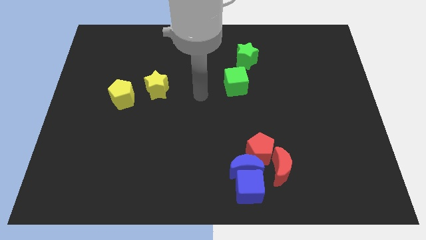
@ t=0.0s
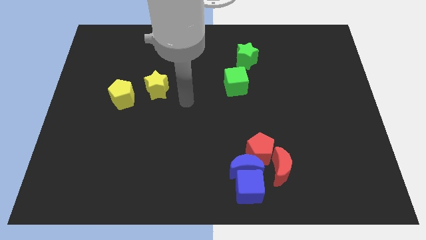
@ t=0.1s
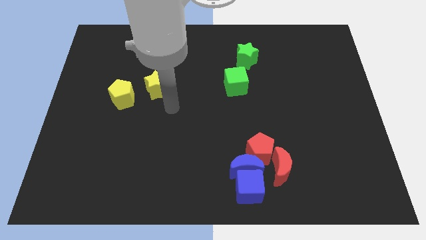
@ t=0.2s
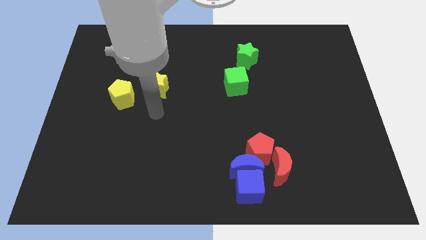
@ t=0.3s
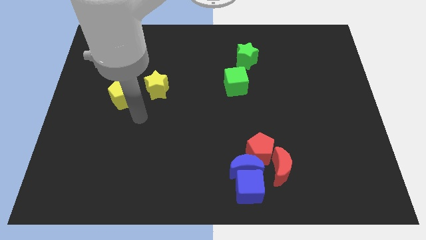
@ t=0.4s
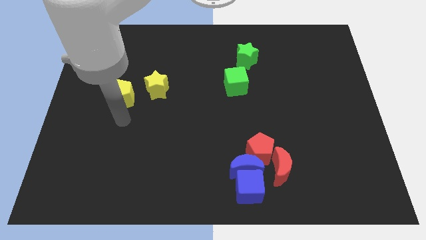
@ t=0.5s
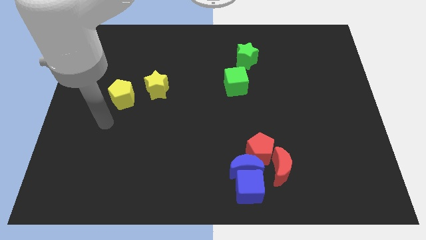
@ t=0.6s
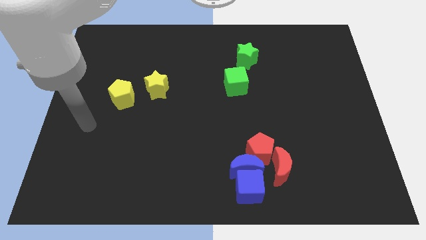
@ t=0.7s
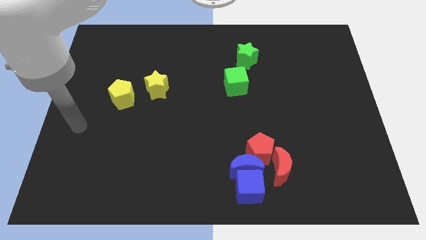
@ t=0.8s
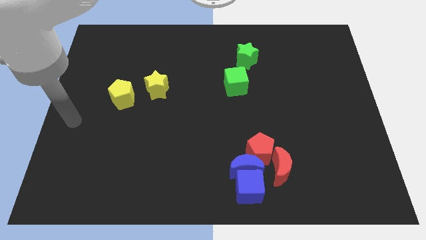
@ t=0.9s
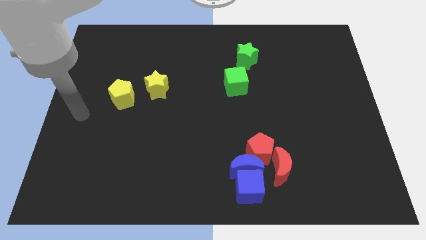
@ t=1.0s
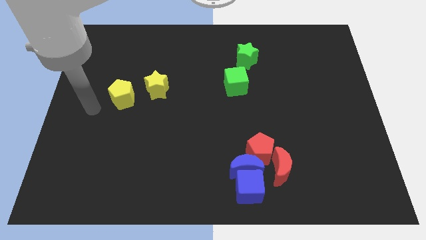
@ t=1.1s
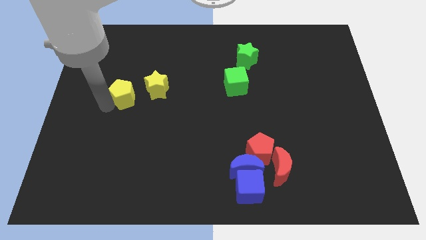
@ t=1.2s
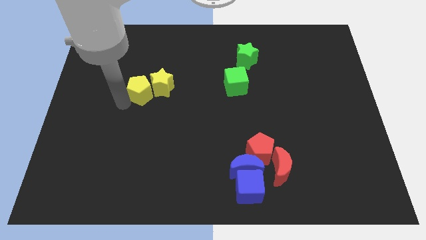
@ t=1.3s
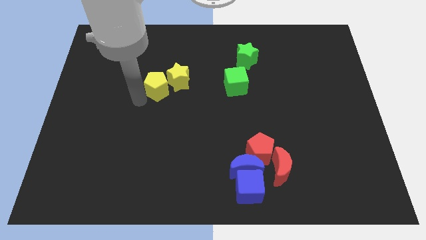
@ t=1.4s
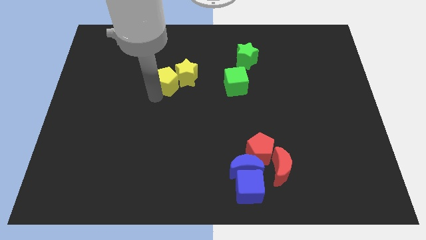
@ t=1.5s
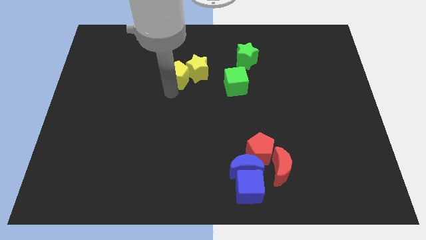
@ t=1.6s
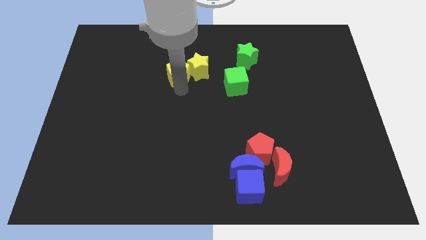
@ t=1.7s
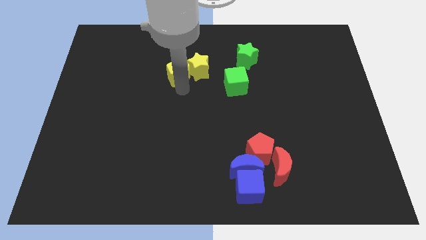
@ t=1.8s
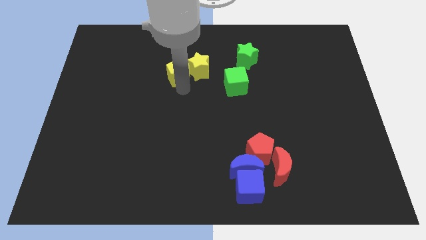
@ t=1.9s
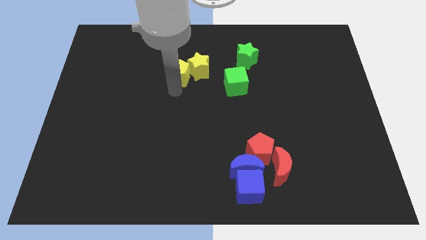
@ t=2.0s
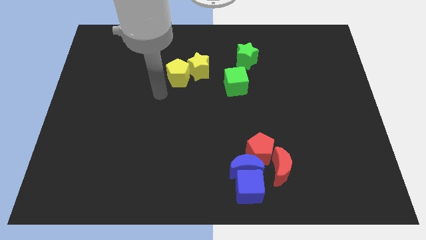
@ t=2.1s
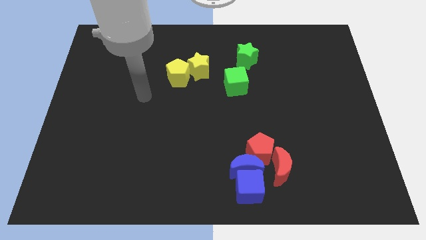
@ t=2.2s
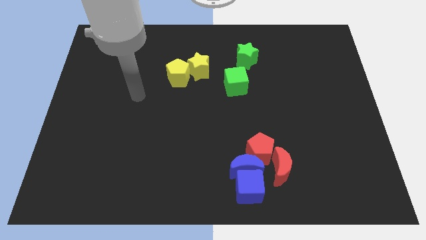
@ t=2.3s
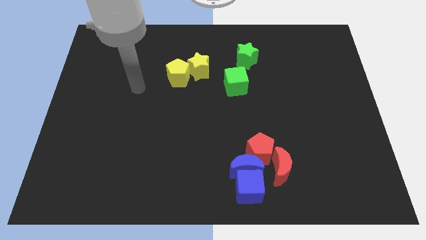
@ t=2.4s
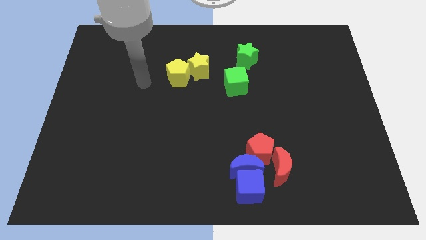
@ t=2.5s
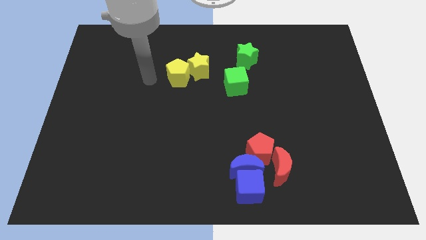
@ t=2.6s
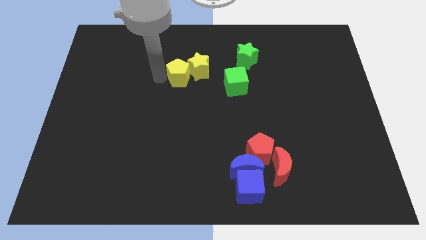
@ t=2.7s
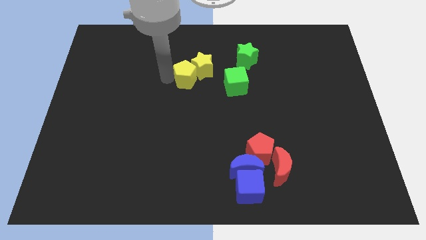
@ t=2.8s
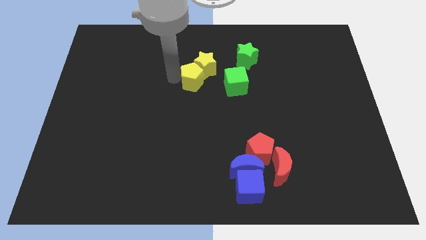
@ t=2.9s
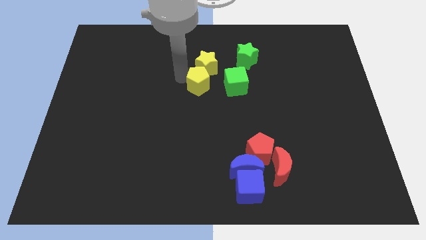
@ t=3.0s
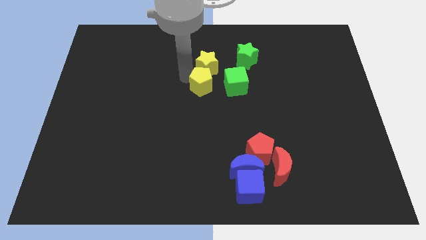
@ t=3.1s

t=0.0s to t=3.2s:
move the yellow blocks towards the green blocks

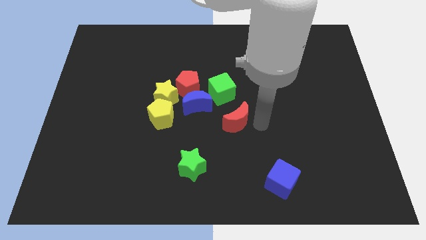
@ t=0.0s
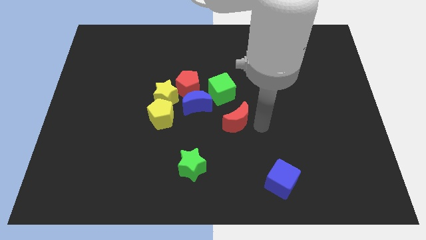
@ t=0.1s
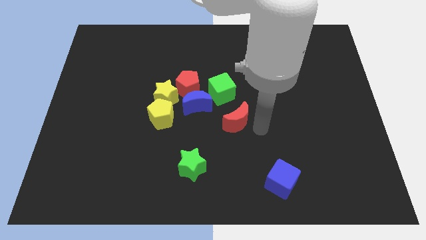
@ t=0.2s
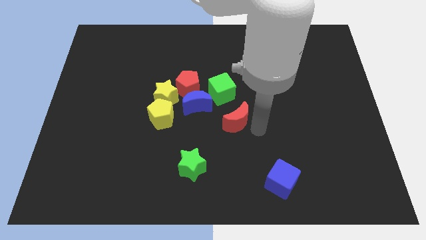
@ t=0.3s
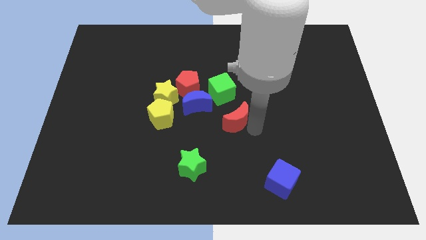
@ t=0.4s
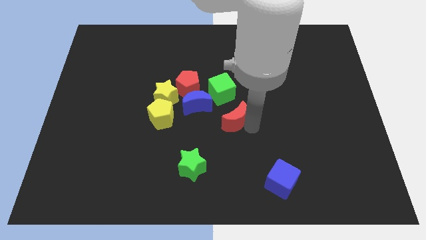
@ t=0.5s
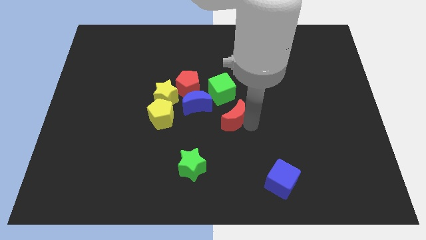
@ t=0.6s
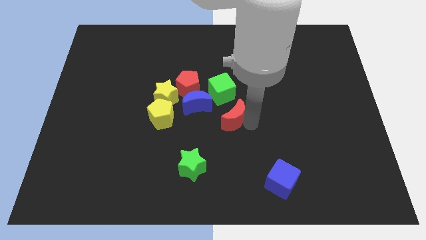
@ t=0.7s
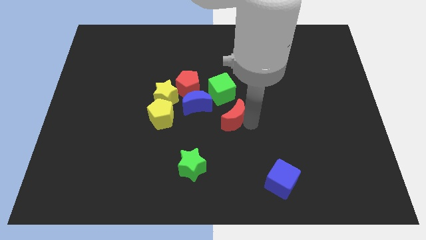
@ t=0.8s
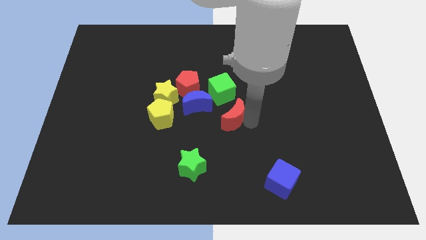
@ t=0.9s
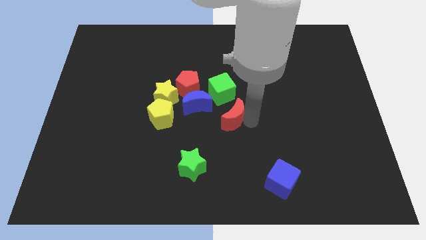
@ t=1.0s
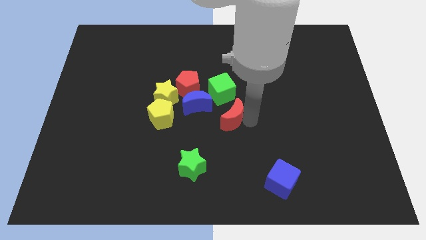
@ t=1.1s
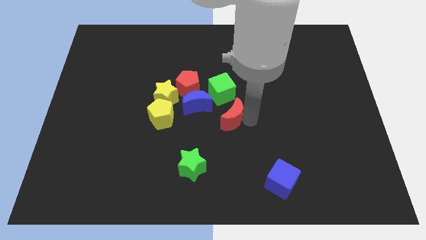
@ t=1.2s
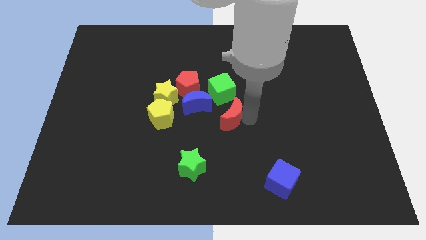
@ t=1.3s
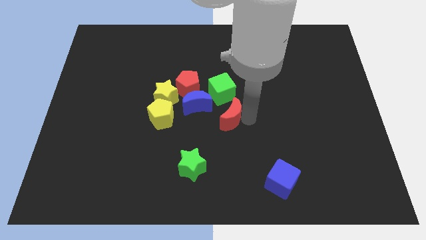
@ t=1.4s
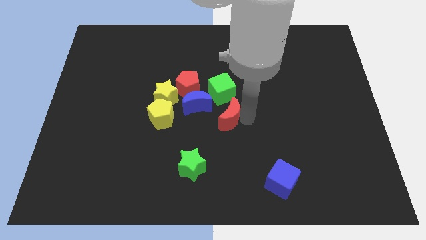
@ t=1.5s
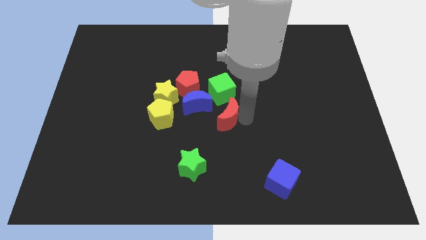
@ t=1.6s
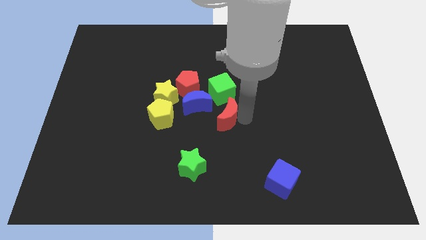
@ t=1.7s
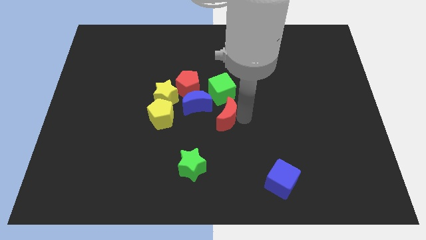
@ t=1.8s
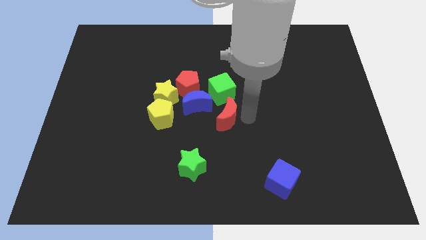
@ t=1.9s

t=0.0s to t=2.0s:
place the red crescent below the green cube

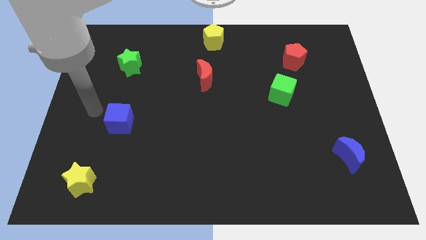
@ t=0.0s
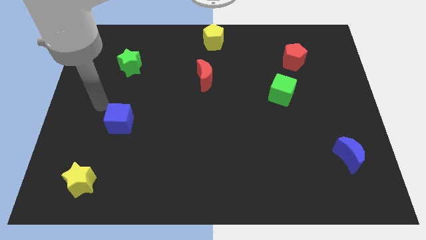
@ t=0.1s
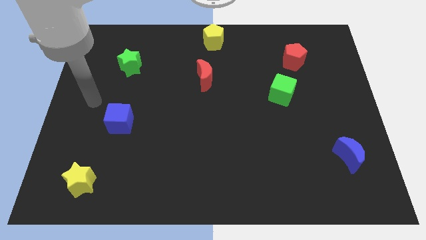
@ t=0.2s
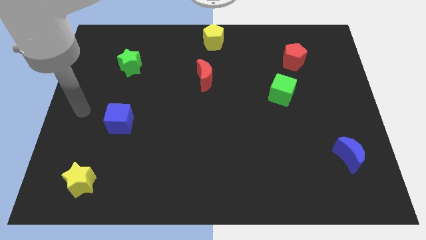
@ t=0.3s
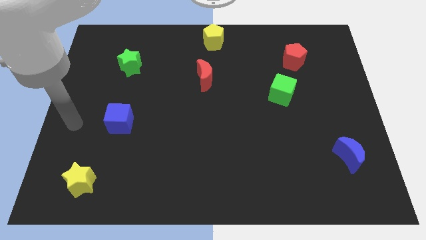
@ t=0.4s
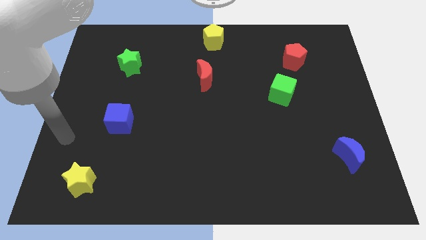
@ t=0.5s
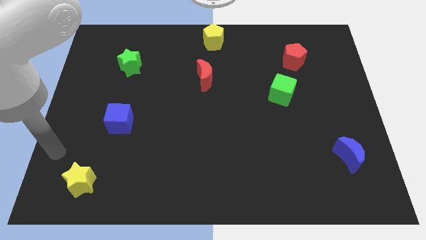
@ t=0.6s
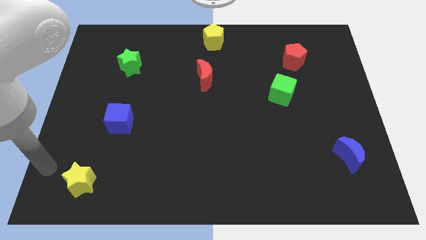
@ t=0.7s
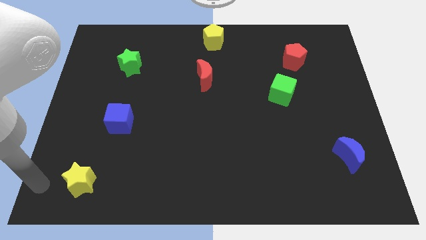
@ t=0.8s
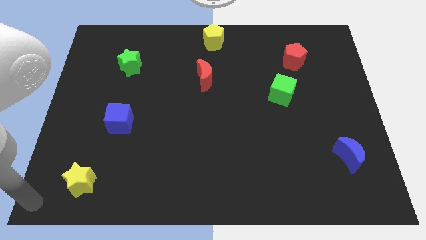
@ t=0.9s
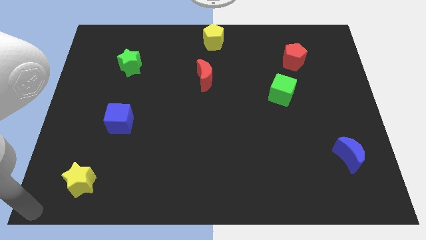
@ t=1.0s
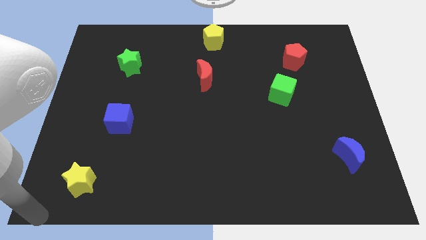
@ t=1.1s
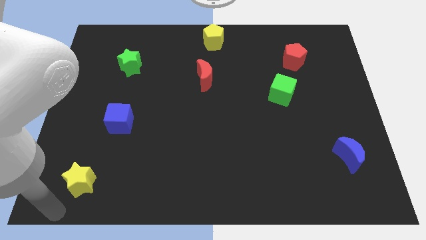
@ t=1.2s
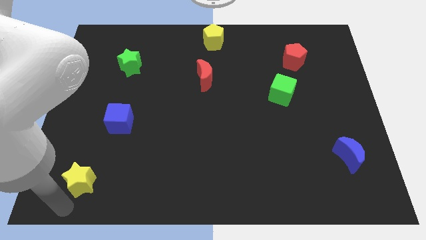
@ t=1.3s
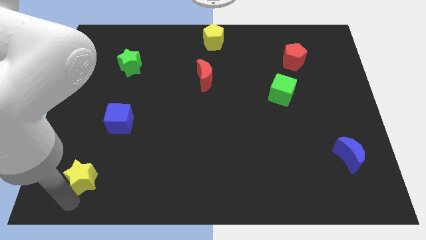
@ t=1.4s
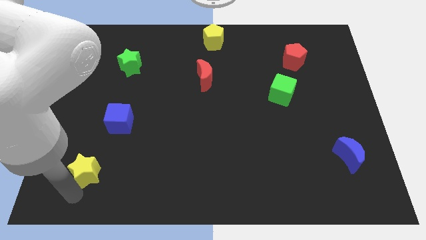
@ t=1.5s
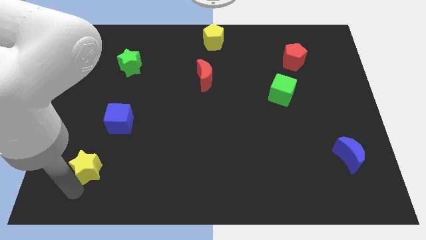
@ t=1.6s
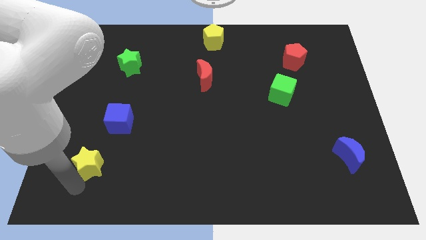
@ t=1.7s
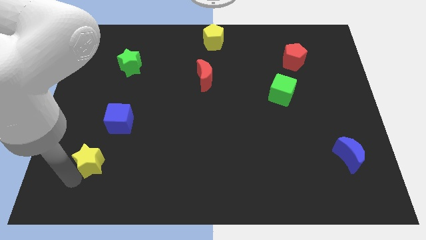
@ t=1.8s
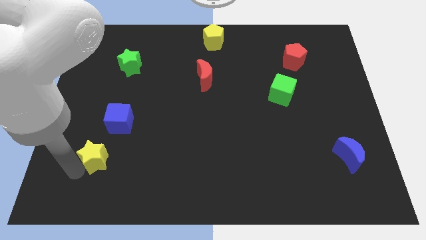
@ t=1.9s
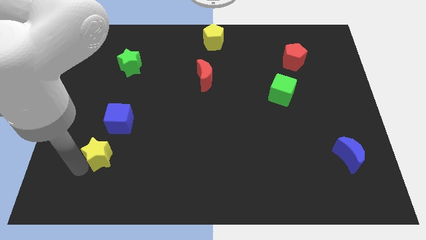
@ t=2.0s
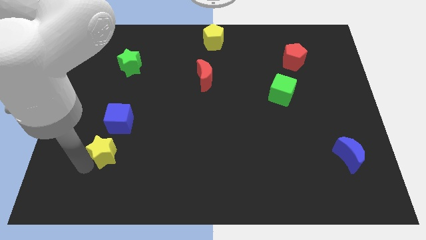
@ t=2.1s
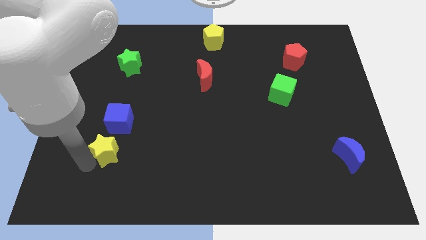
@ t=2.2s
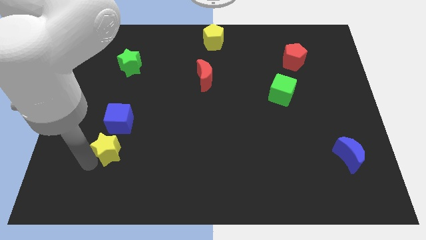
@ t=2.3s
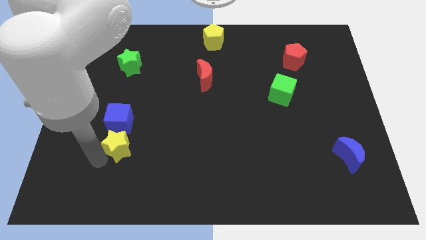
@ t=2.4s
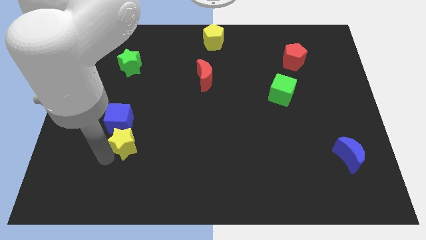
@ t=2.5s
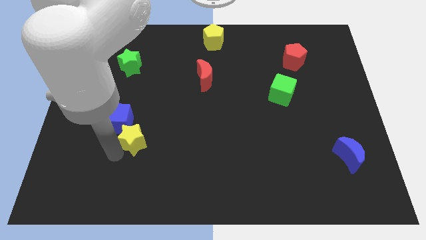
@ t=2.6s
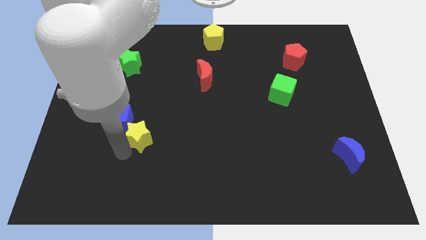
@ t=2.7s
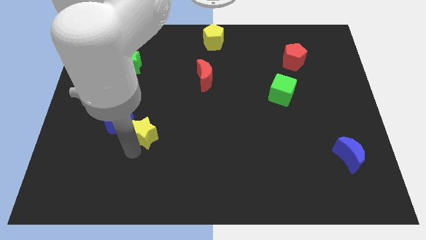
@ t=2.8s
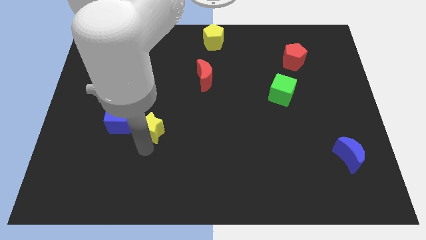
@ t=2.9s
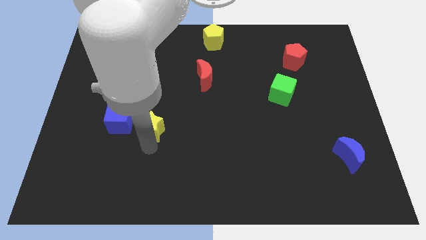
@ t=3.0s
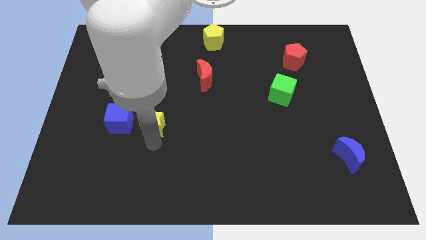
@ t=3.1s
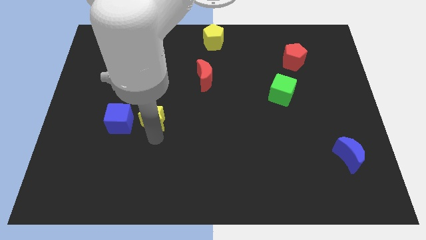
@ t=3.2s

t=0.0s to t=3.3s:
place the yellow star right to the blue cube

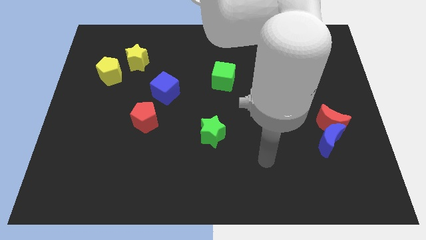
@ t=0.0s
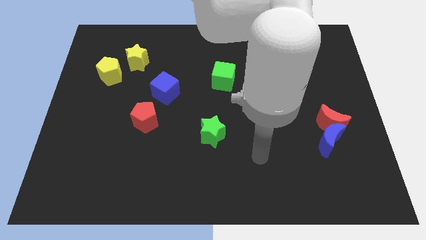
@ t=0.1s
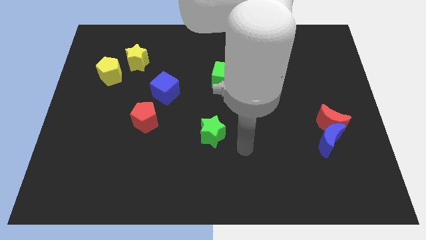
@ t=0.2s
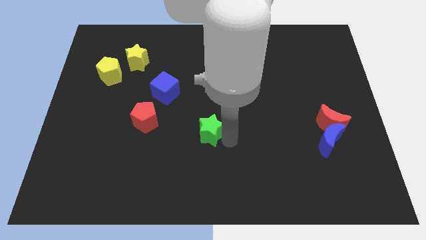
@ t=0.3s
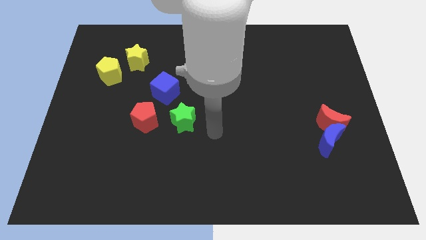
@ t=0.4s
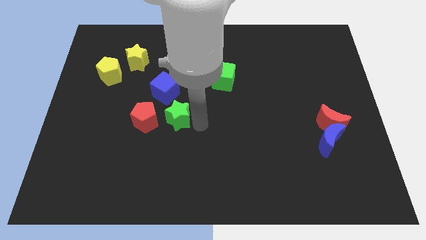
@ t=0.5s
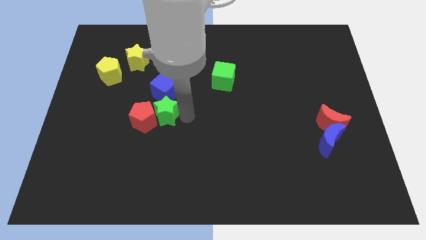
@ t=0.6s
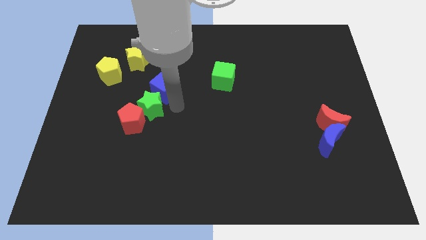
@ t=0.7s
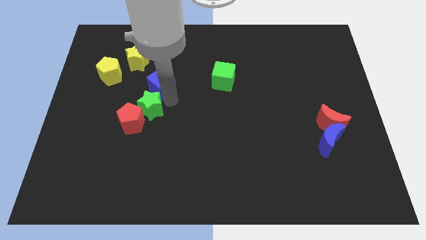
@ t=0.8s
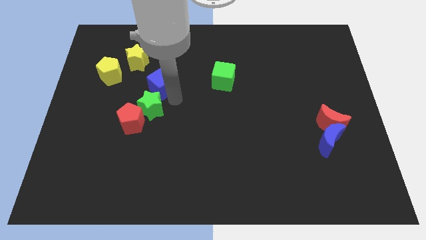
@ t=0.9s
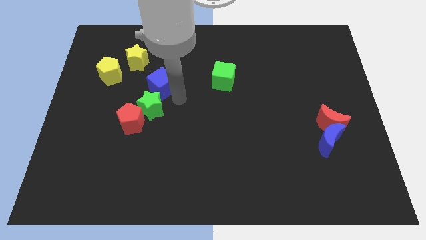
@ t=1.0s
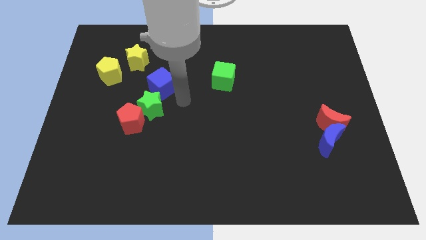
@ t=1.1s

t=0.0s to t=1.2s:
place green star in between red pentagon and blue cube
